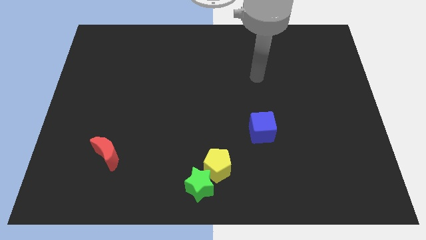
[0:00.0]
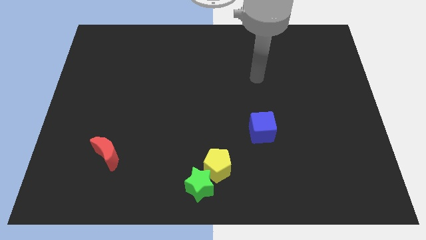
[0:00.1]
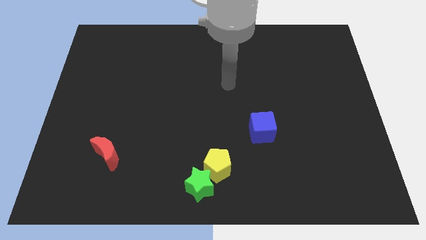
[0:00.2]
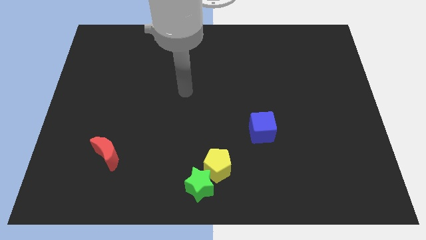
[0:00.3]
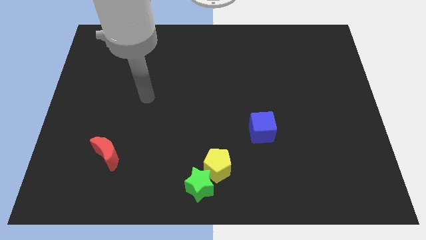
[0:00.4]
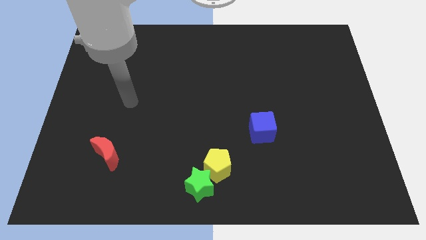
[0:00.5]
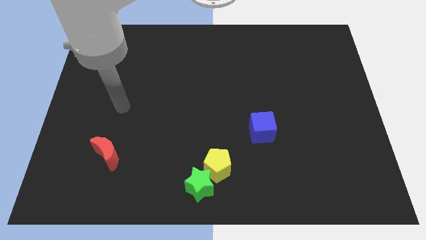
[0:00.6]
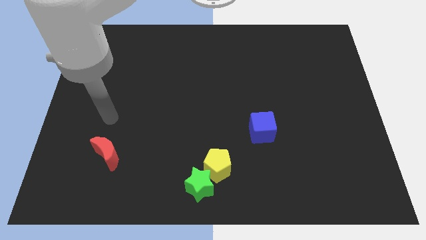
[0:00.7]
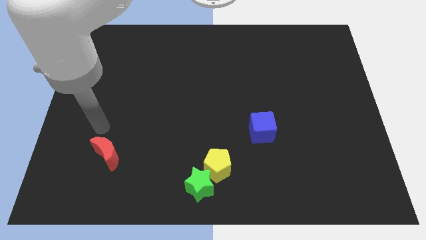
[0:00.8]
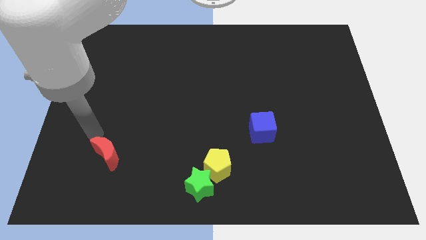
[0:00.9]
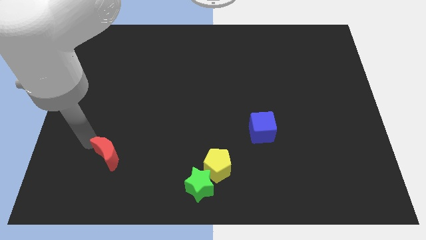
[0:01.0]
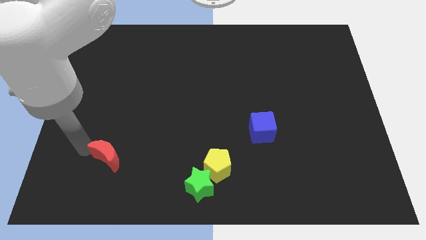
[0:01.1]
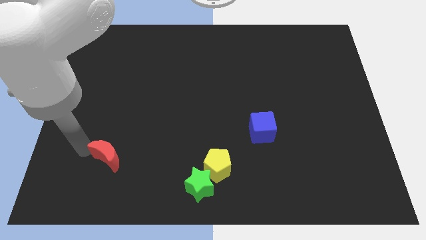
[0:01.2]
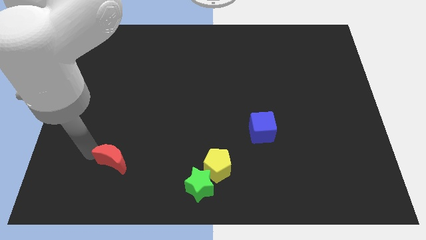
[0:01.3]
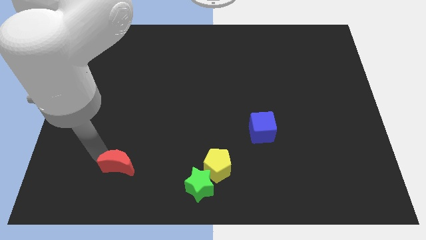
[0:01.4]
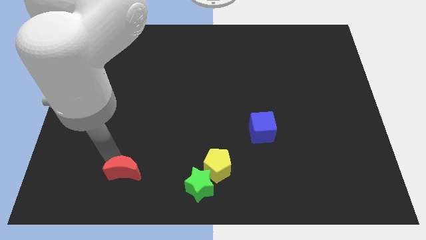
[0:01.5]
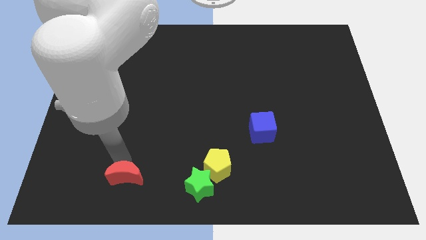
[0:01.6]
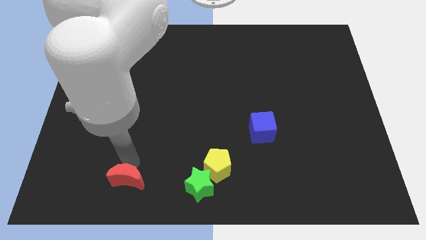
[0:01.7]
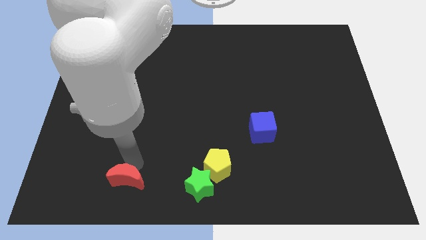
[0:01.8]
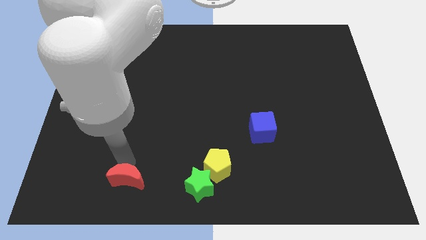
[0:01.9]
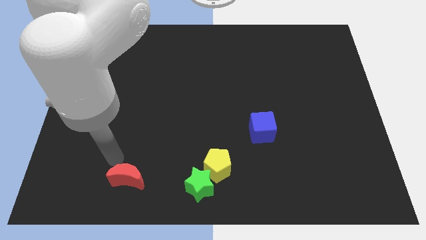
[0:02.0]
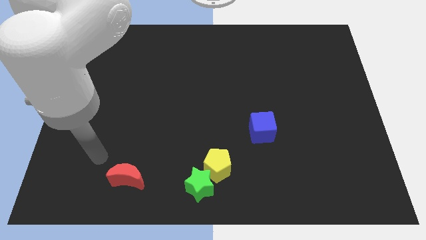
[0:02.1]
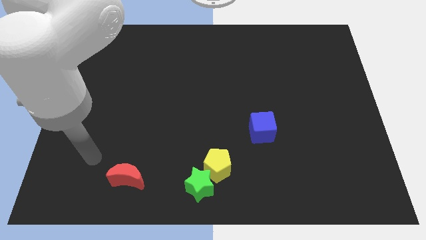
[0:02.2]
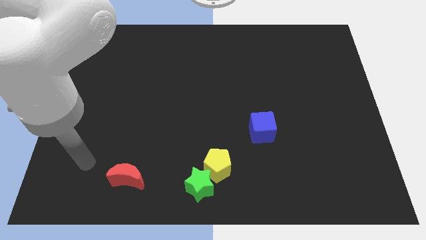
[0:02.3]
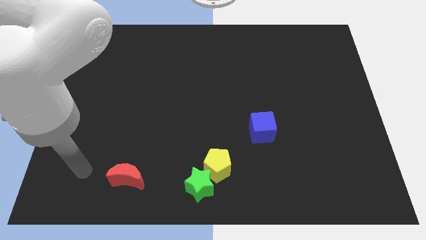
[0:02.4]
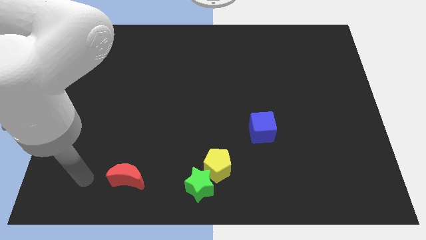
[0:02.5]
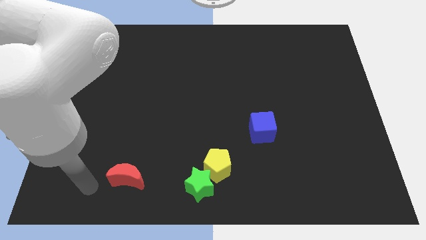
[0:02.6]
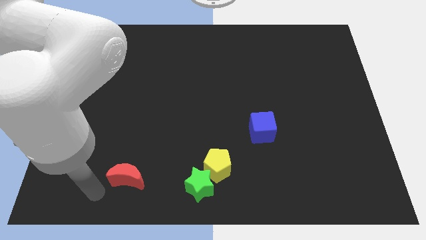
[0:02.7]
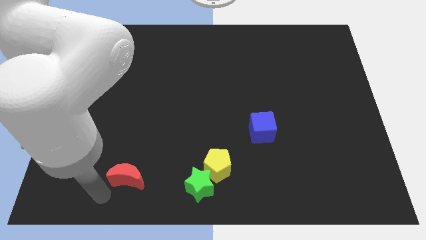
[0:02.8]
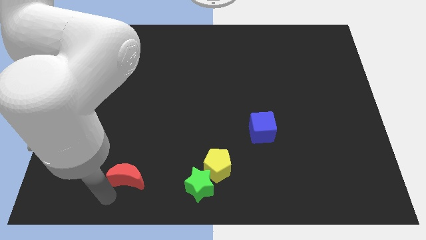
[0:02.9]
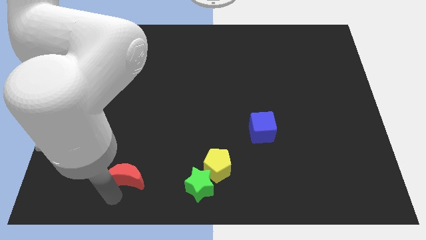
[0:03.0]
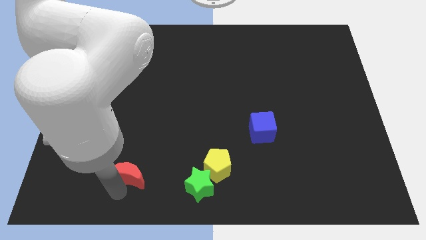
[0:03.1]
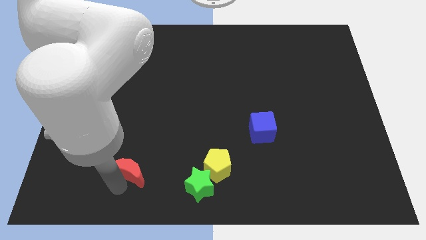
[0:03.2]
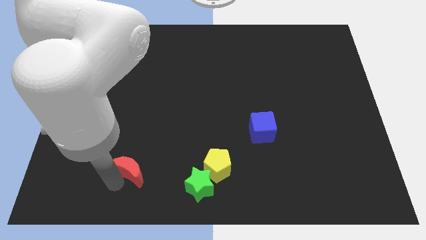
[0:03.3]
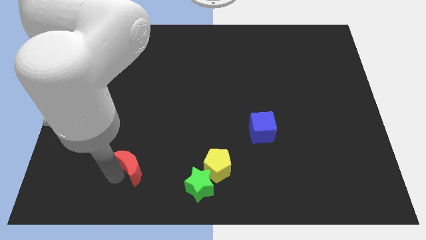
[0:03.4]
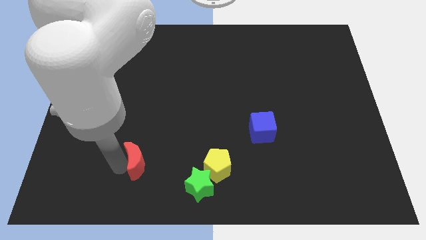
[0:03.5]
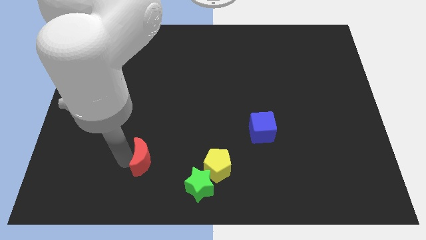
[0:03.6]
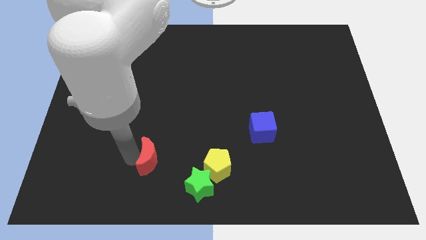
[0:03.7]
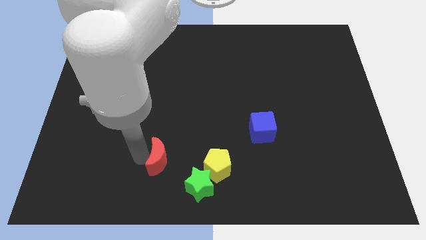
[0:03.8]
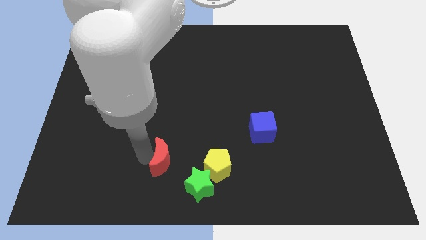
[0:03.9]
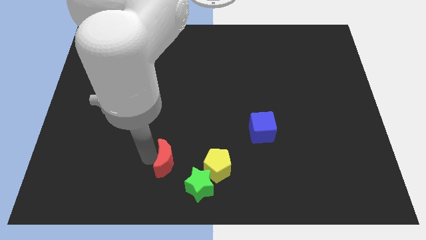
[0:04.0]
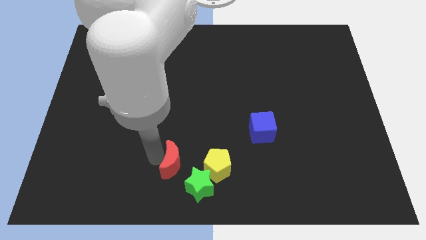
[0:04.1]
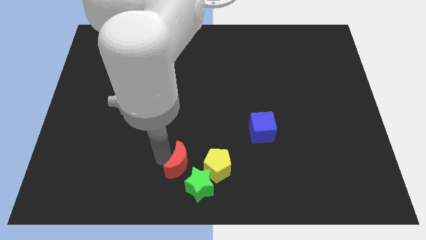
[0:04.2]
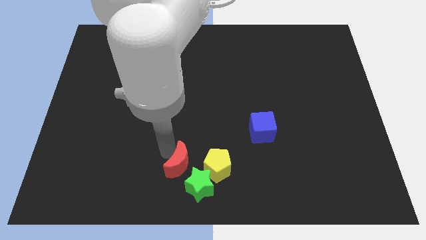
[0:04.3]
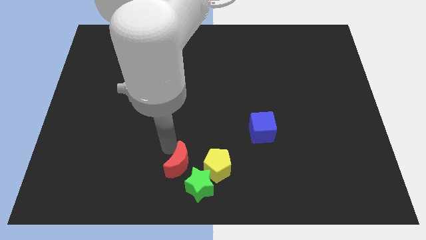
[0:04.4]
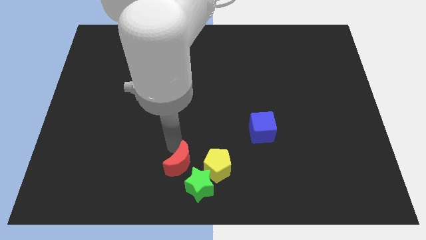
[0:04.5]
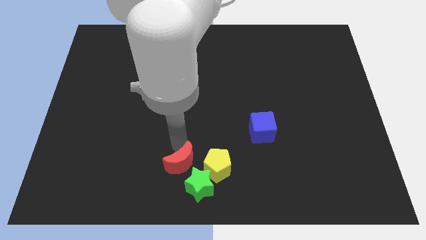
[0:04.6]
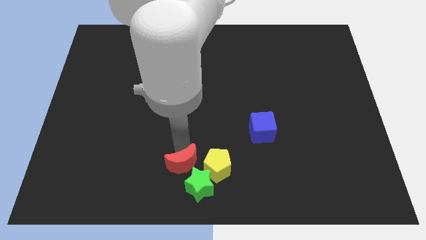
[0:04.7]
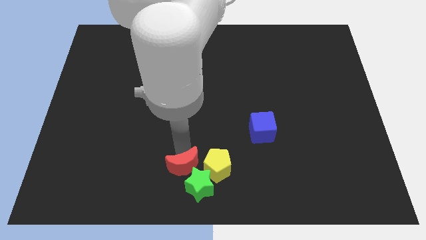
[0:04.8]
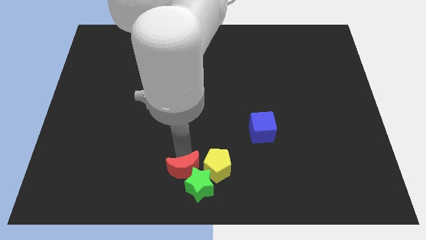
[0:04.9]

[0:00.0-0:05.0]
move the red block to the star

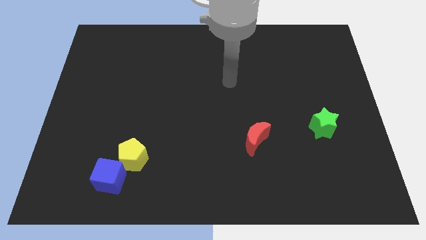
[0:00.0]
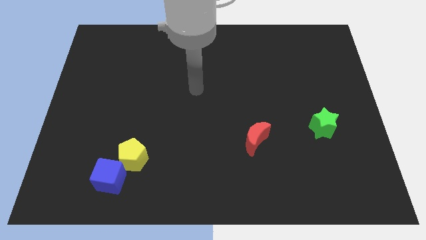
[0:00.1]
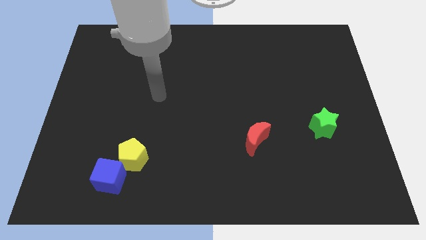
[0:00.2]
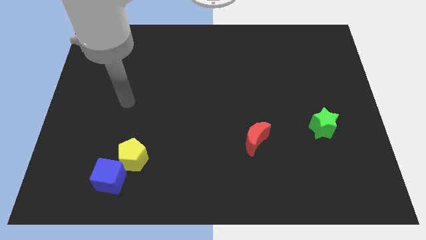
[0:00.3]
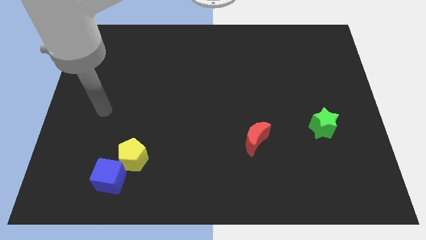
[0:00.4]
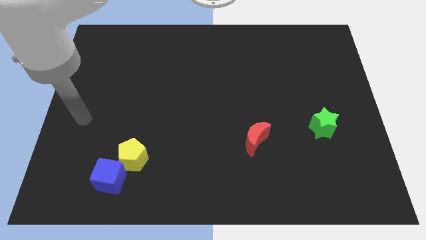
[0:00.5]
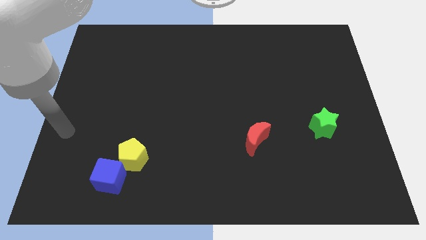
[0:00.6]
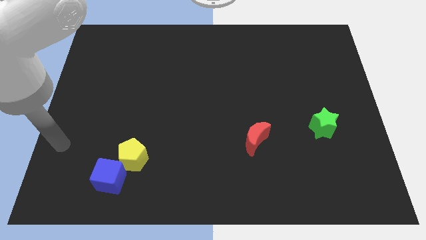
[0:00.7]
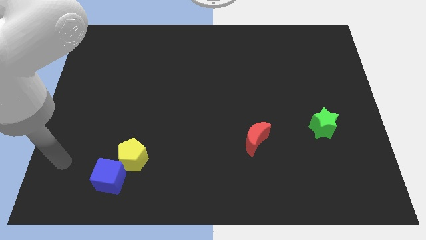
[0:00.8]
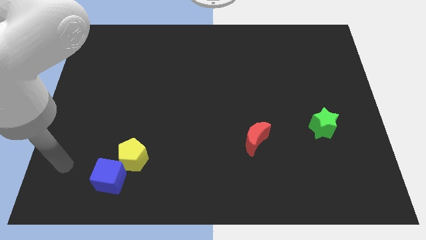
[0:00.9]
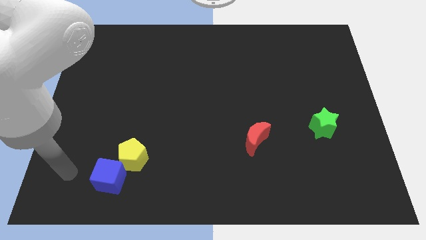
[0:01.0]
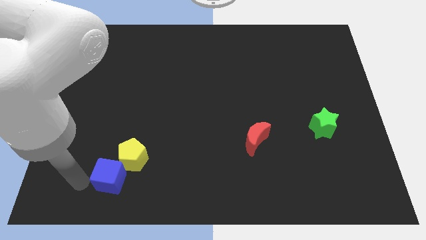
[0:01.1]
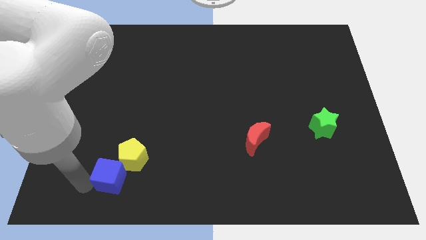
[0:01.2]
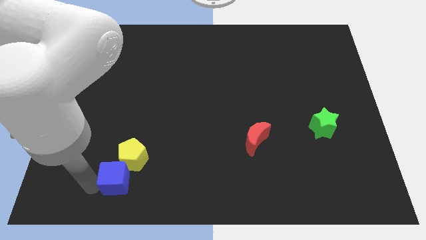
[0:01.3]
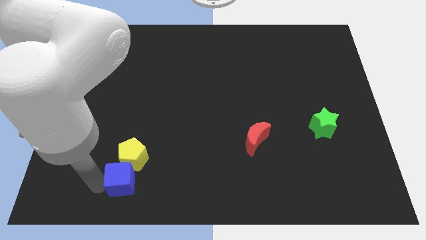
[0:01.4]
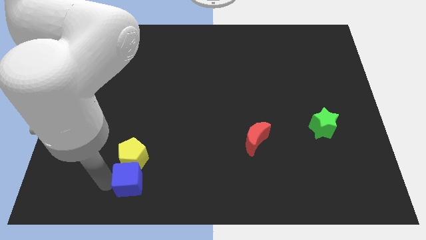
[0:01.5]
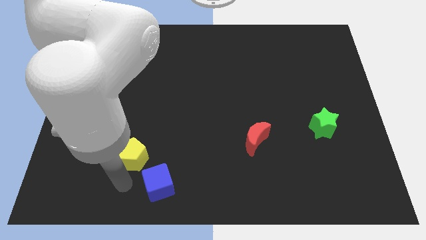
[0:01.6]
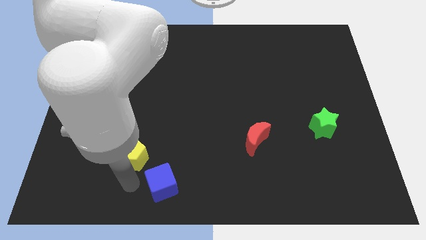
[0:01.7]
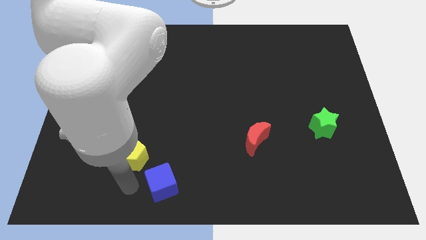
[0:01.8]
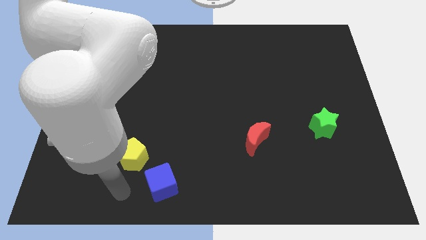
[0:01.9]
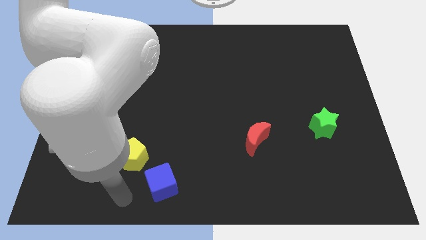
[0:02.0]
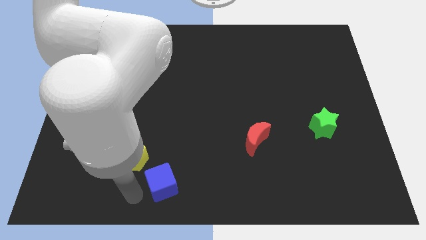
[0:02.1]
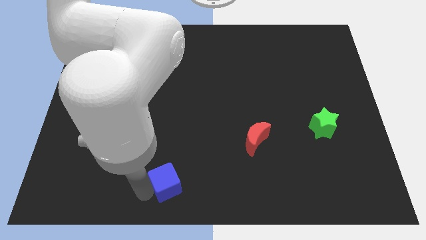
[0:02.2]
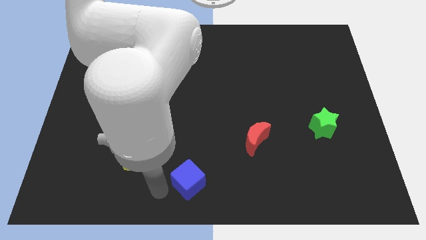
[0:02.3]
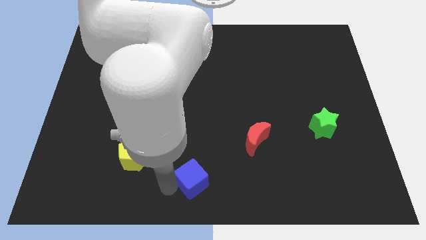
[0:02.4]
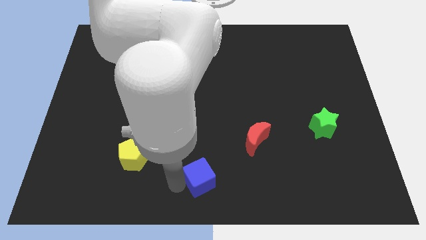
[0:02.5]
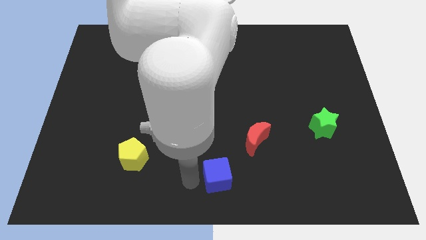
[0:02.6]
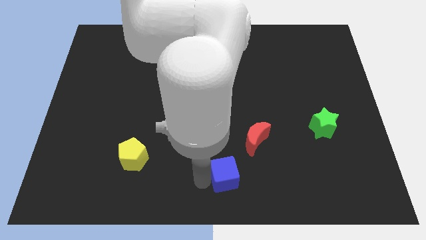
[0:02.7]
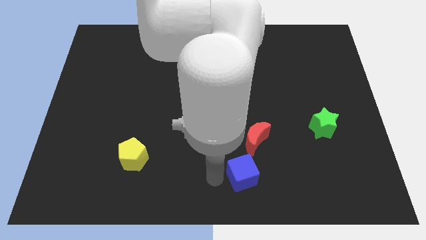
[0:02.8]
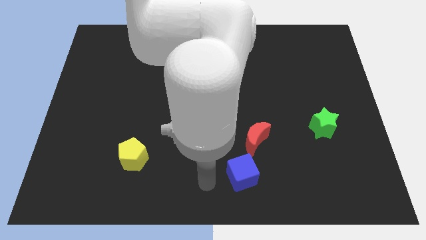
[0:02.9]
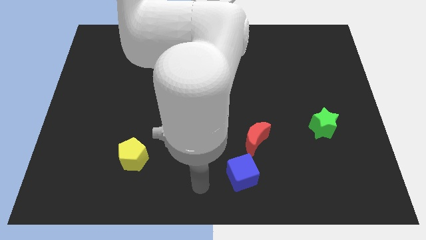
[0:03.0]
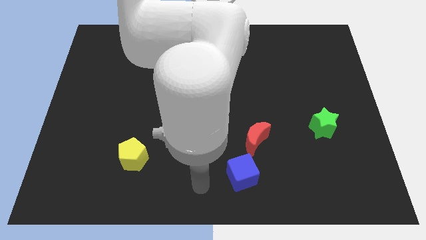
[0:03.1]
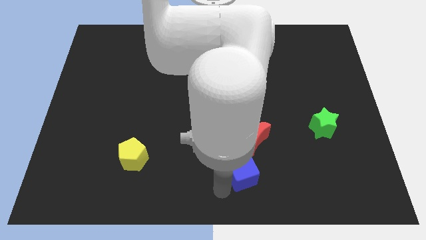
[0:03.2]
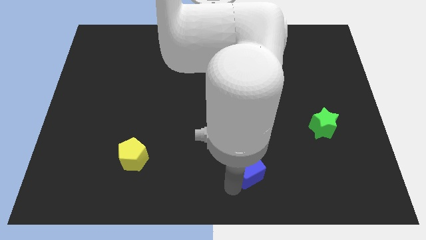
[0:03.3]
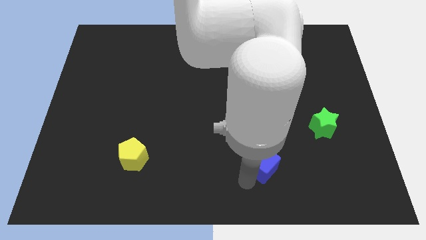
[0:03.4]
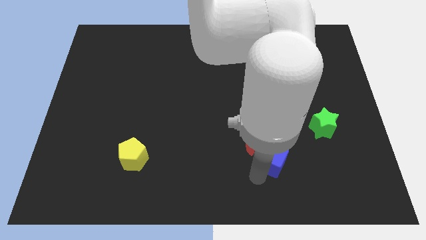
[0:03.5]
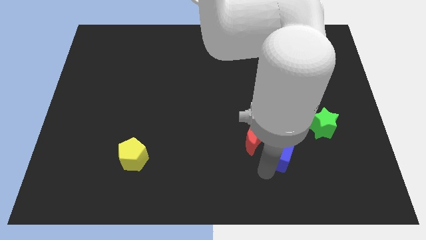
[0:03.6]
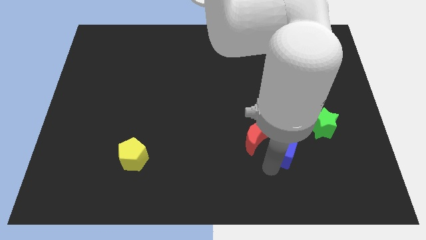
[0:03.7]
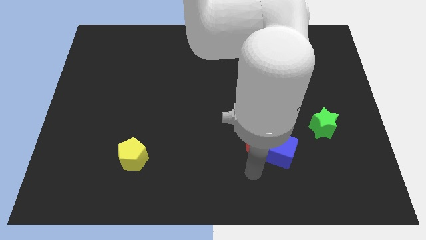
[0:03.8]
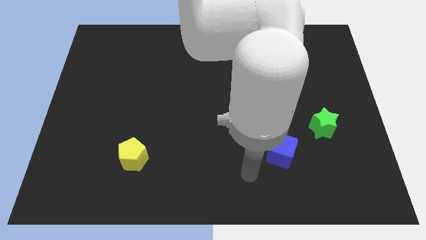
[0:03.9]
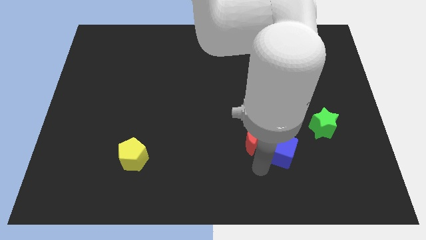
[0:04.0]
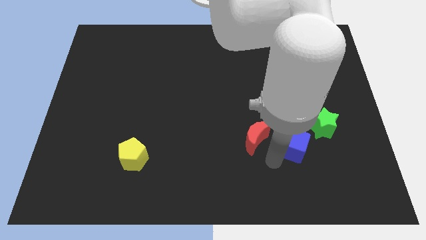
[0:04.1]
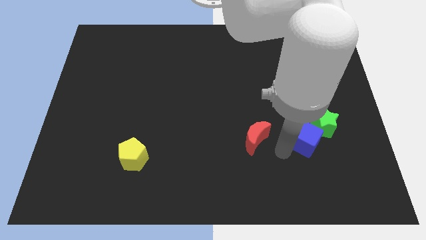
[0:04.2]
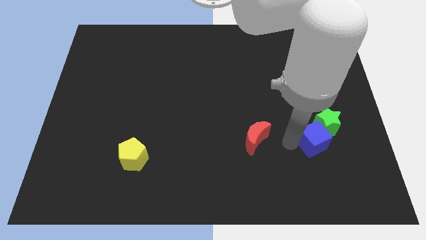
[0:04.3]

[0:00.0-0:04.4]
put the blue block next to the green block
